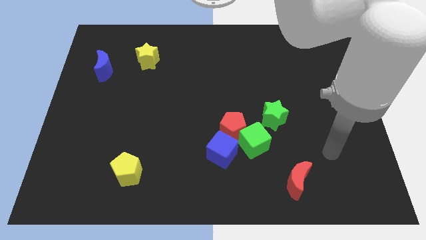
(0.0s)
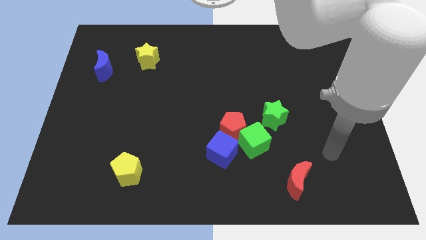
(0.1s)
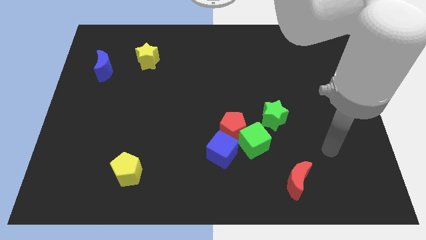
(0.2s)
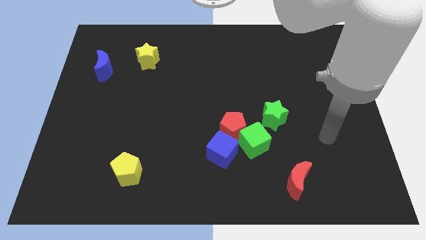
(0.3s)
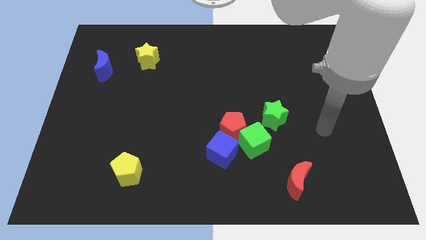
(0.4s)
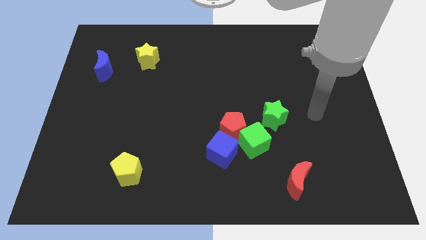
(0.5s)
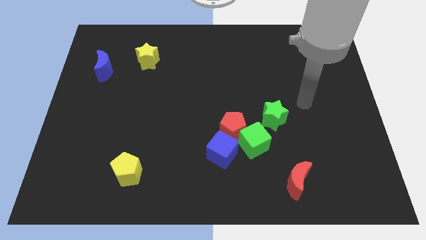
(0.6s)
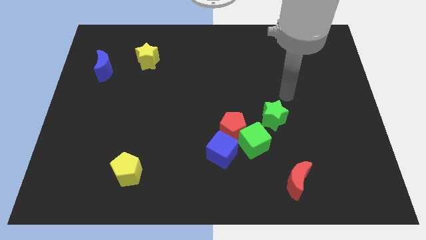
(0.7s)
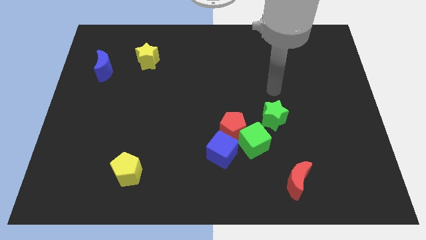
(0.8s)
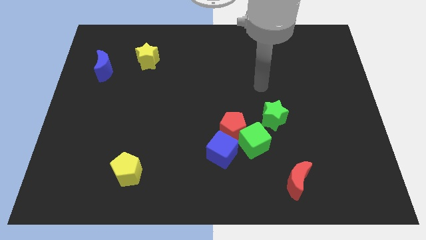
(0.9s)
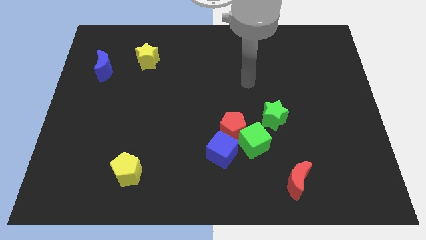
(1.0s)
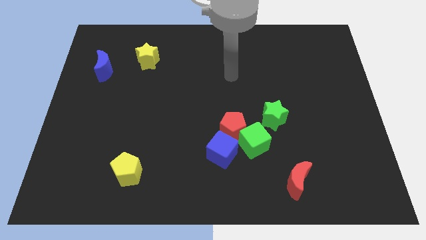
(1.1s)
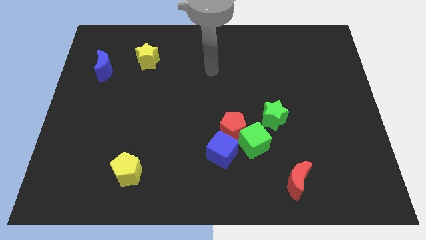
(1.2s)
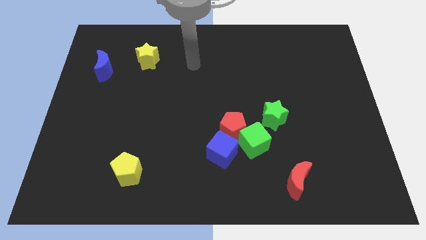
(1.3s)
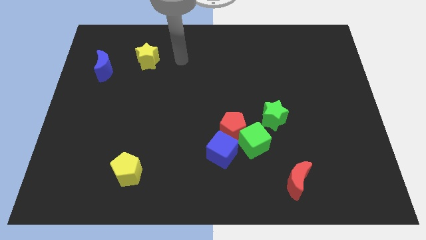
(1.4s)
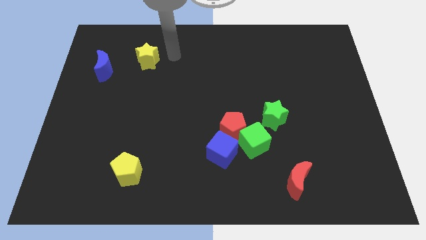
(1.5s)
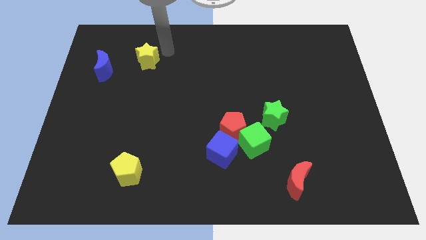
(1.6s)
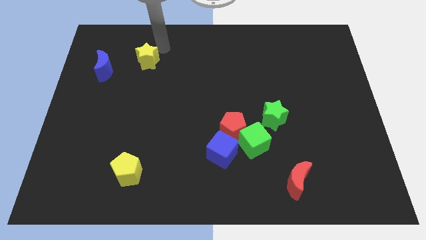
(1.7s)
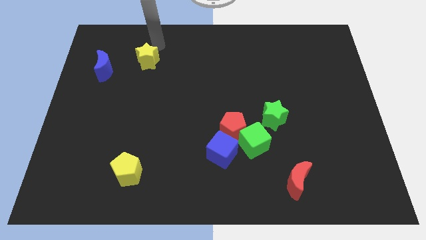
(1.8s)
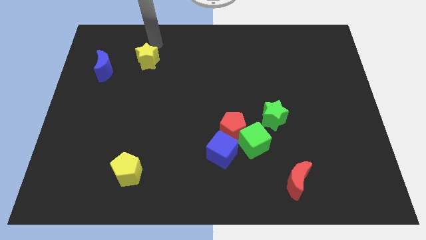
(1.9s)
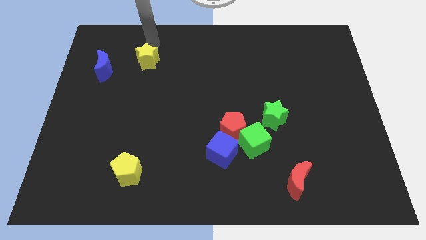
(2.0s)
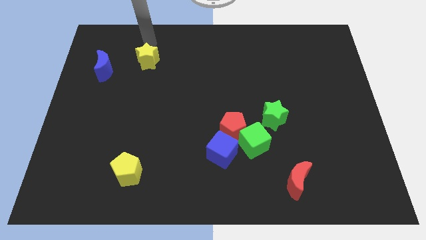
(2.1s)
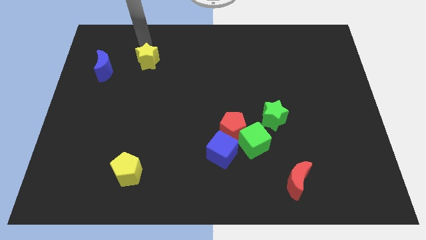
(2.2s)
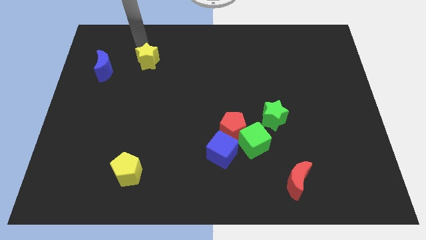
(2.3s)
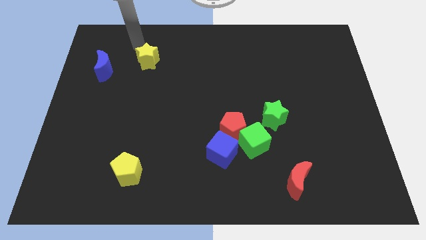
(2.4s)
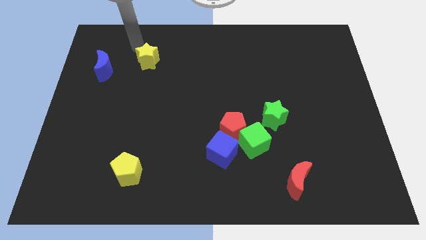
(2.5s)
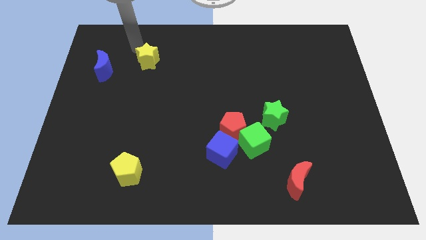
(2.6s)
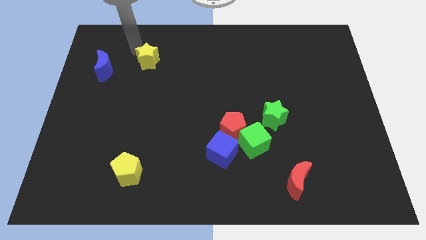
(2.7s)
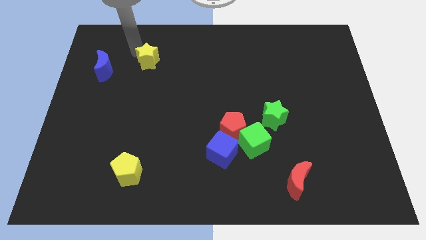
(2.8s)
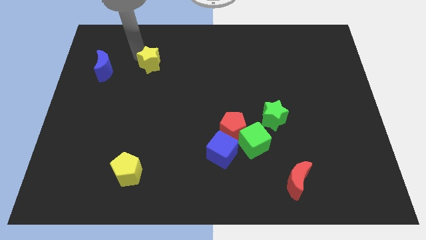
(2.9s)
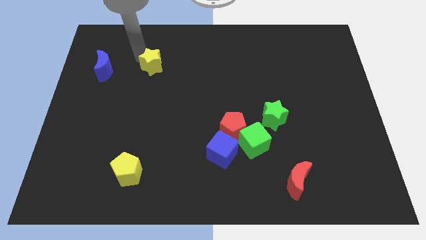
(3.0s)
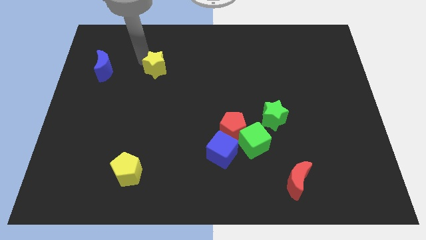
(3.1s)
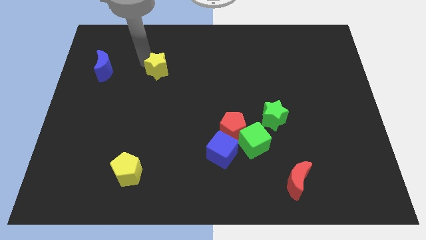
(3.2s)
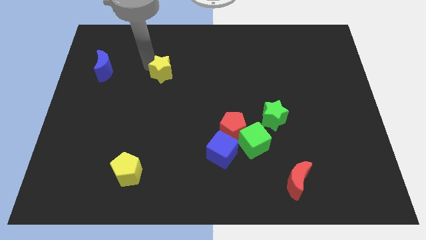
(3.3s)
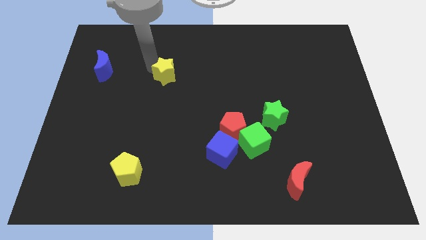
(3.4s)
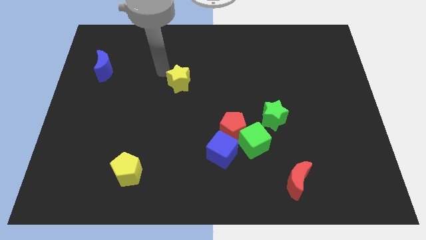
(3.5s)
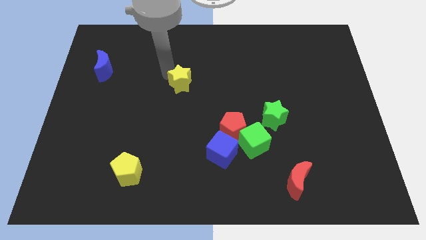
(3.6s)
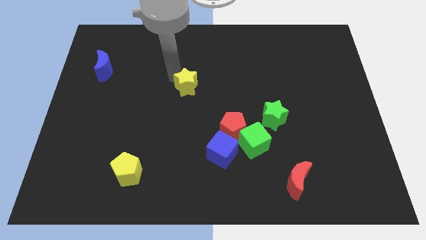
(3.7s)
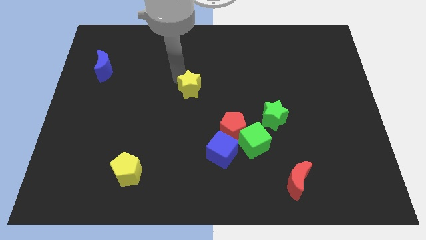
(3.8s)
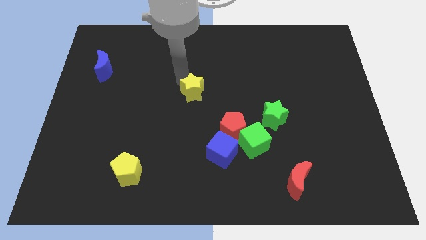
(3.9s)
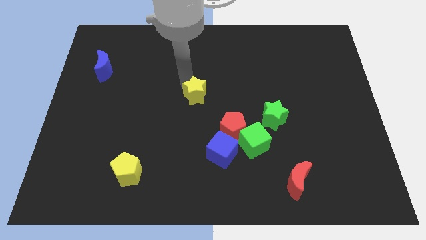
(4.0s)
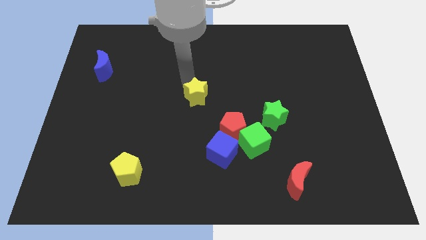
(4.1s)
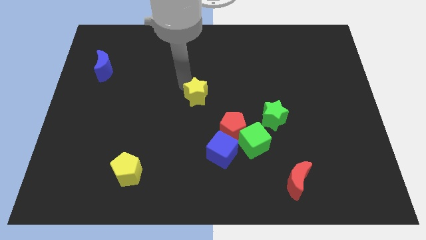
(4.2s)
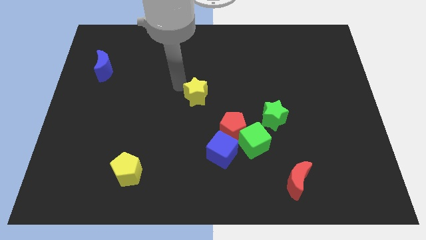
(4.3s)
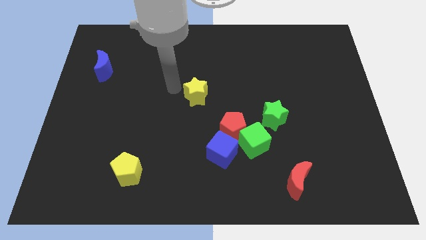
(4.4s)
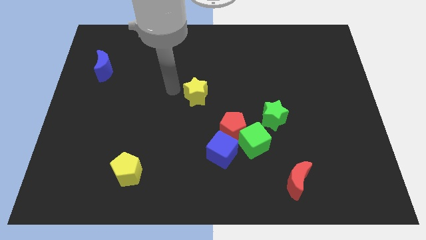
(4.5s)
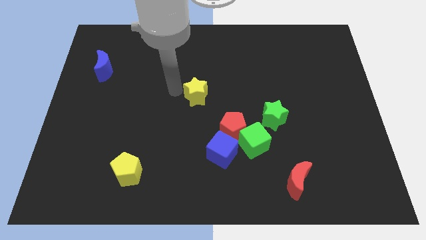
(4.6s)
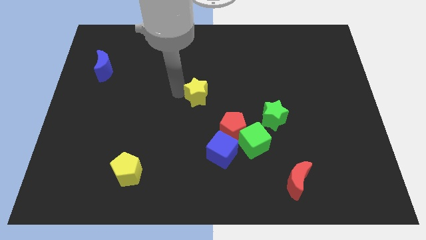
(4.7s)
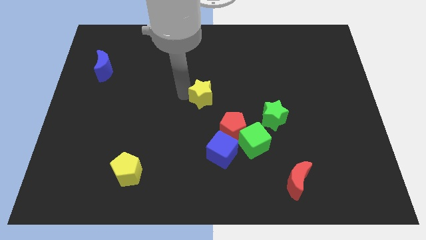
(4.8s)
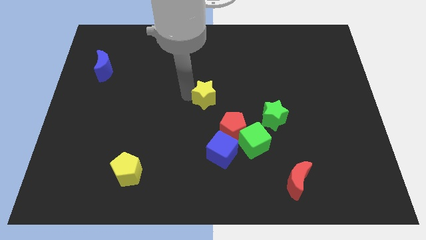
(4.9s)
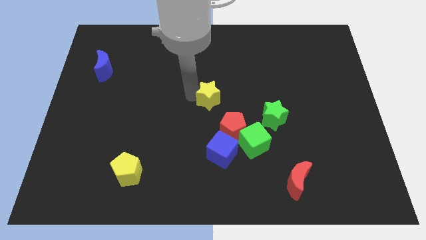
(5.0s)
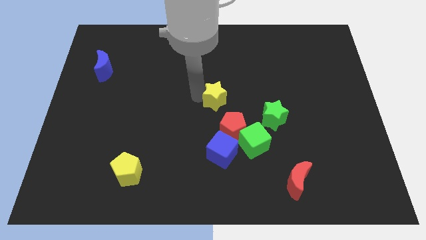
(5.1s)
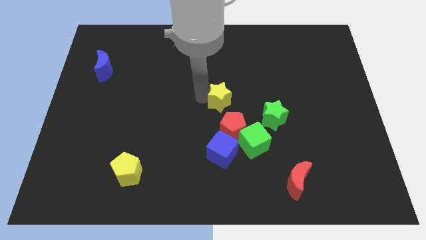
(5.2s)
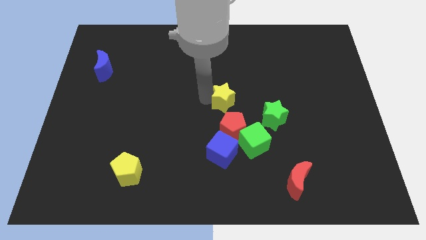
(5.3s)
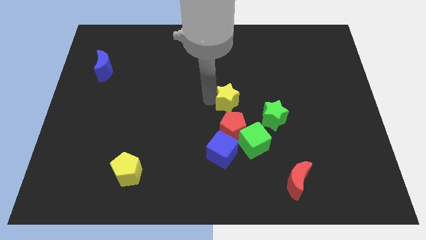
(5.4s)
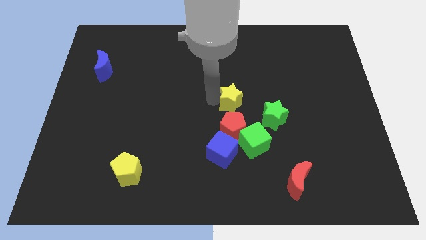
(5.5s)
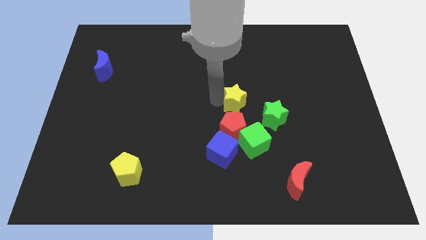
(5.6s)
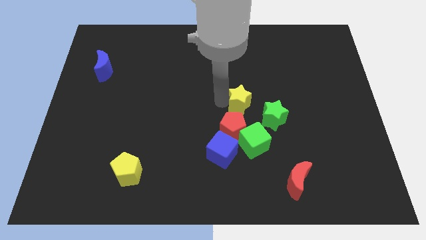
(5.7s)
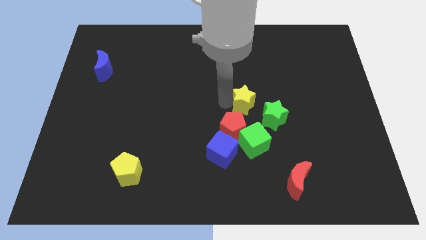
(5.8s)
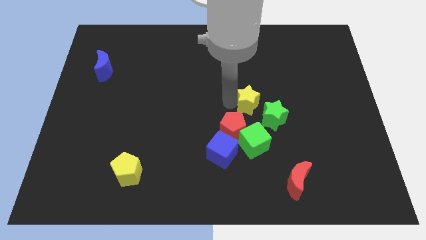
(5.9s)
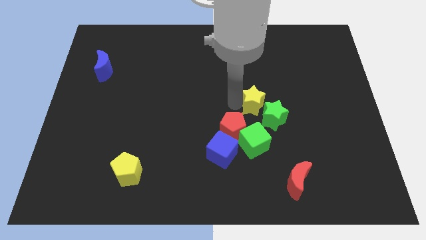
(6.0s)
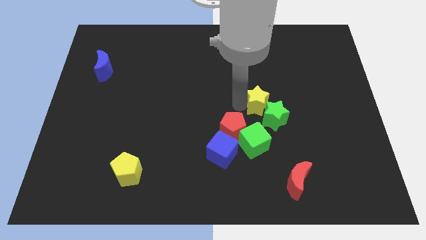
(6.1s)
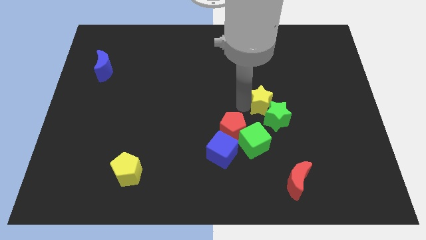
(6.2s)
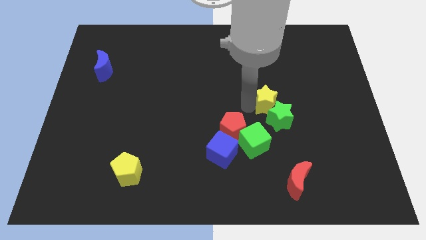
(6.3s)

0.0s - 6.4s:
slide the yellow star close to the green star

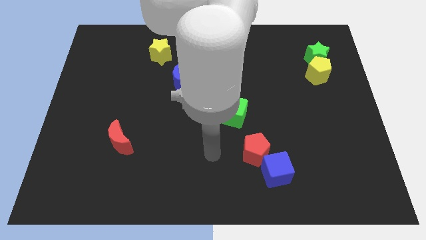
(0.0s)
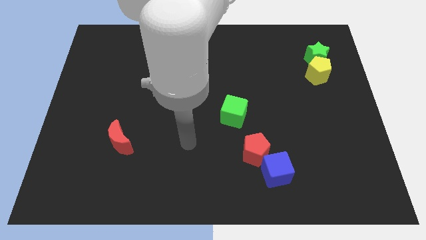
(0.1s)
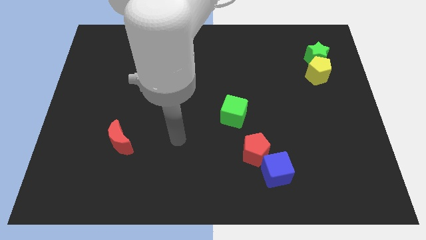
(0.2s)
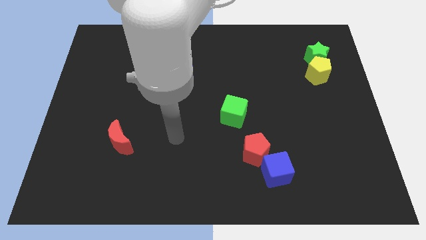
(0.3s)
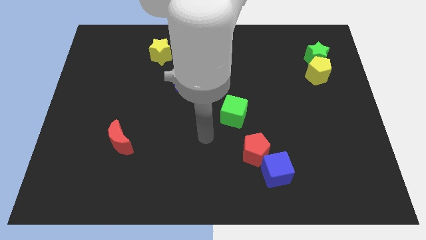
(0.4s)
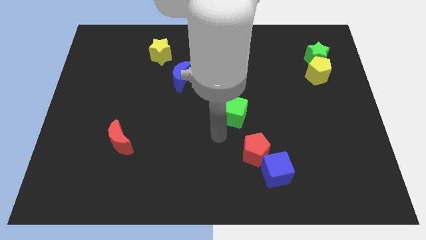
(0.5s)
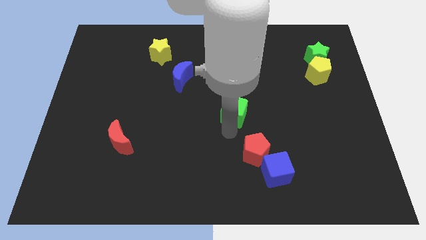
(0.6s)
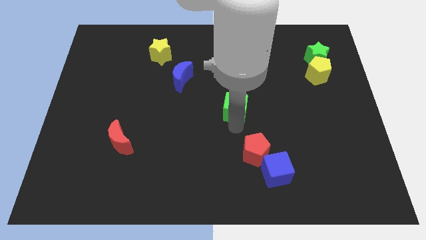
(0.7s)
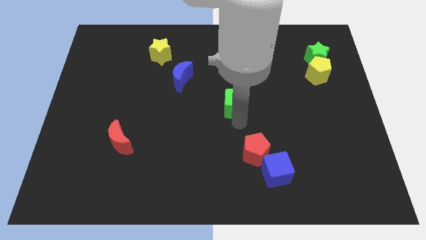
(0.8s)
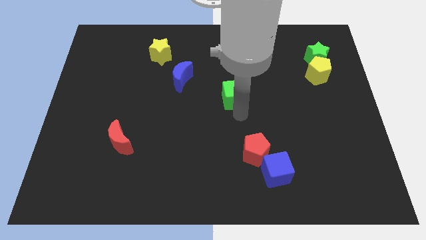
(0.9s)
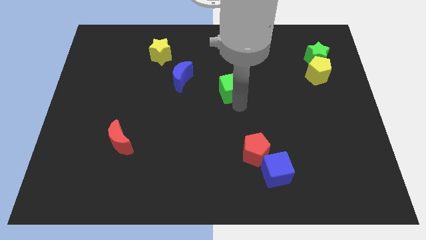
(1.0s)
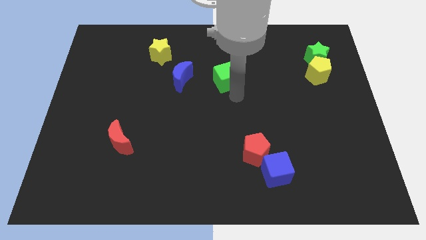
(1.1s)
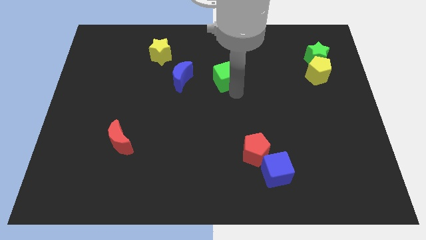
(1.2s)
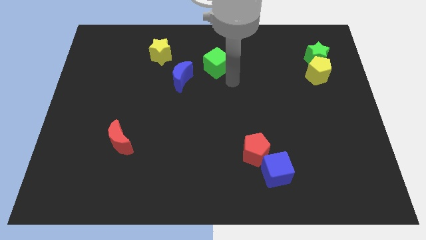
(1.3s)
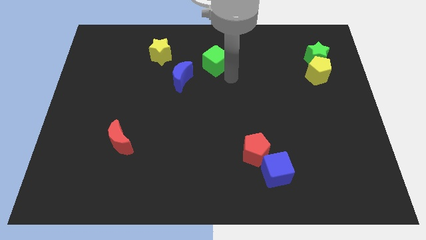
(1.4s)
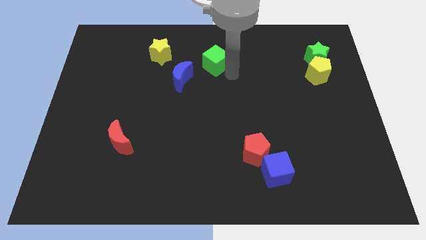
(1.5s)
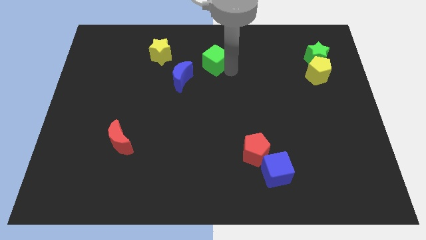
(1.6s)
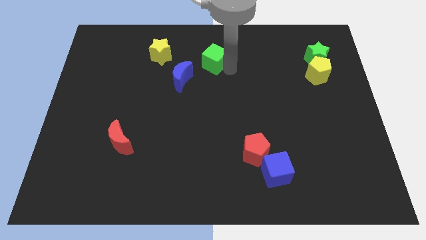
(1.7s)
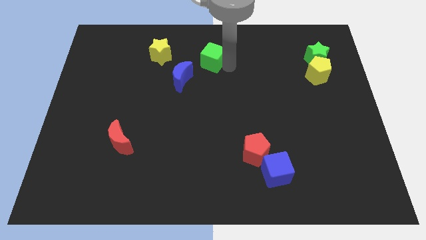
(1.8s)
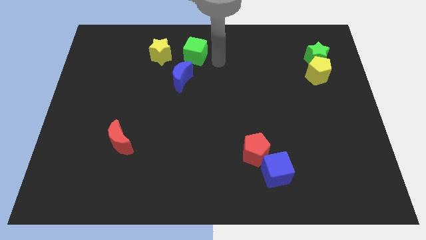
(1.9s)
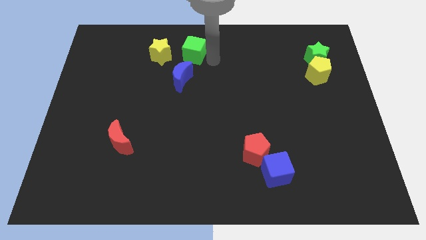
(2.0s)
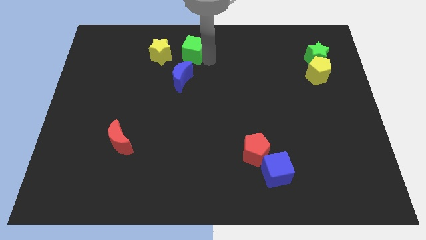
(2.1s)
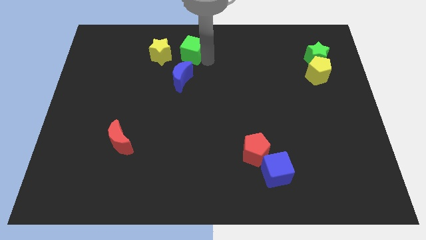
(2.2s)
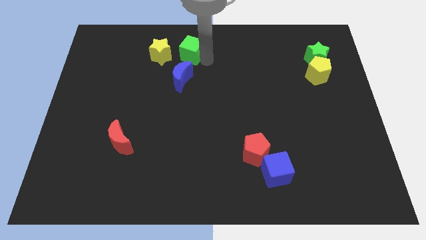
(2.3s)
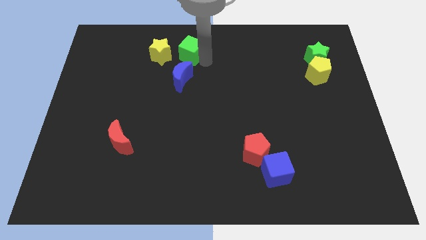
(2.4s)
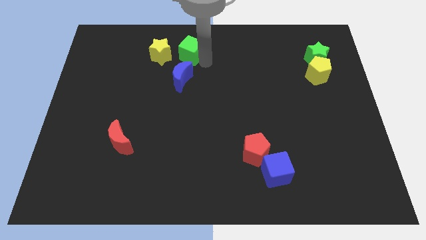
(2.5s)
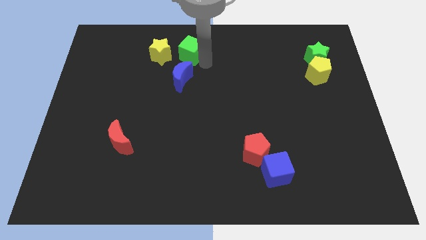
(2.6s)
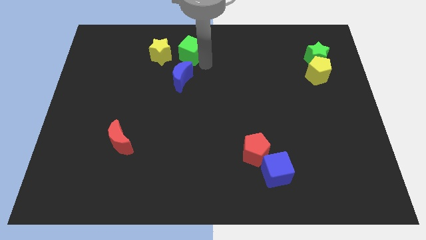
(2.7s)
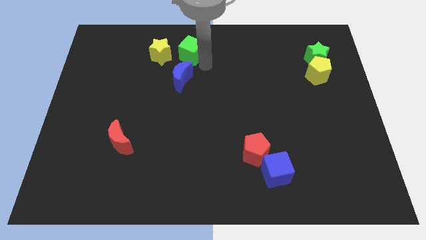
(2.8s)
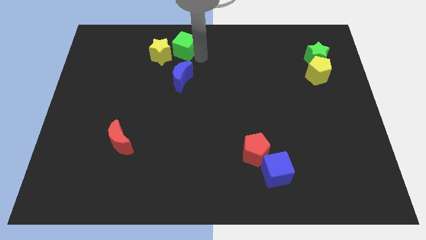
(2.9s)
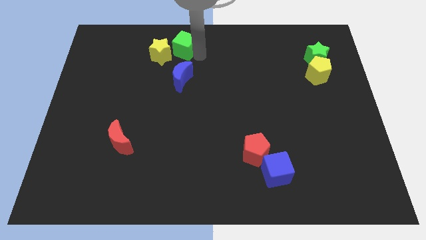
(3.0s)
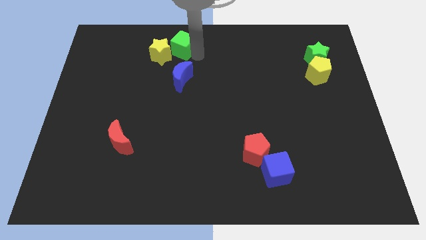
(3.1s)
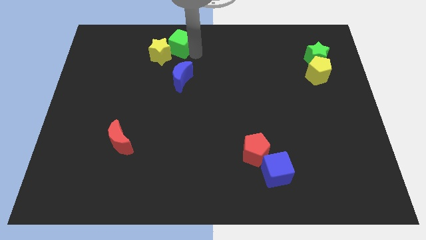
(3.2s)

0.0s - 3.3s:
put the green cube to the yellow star
